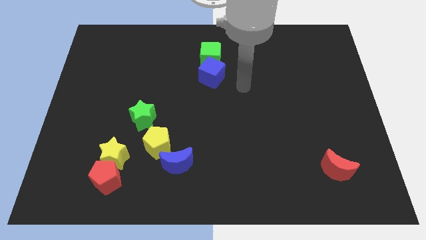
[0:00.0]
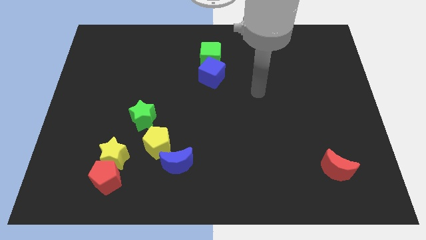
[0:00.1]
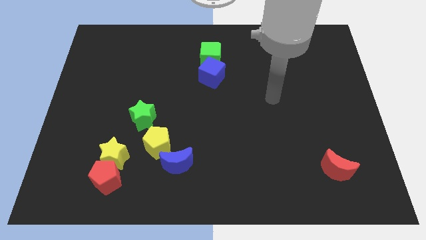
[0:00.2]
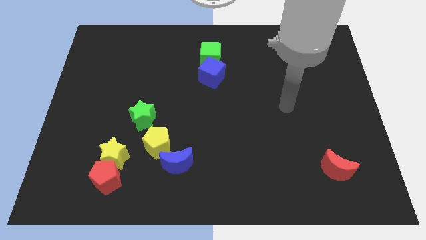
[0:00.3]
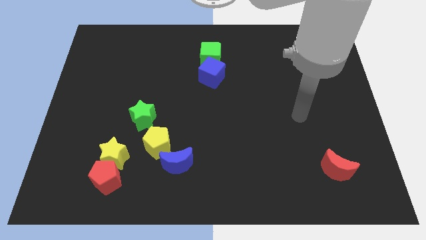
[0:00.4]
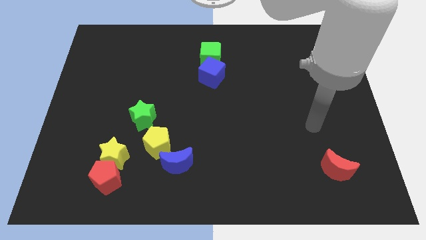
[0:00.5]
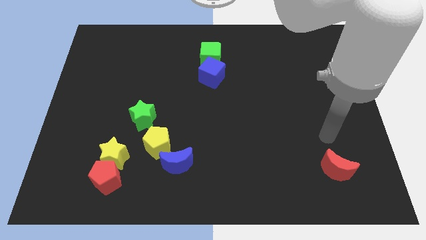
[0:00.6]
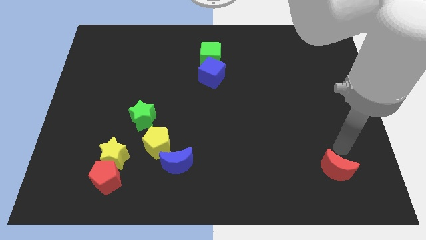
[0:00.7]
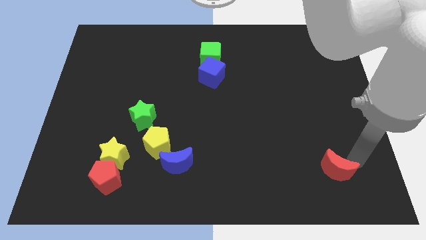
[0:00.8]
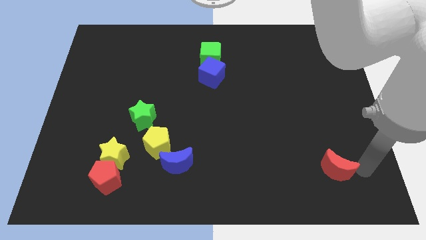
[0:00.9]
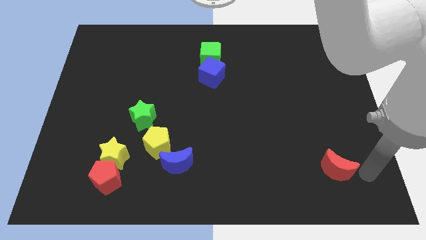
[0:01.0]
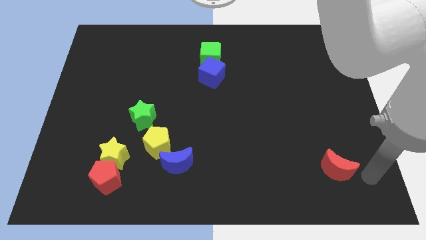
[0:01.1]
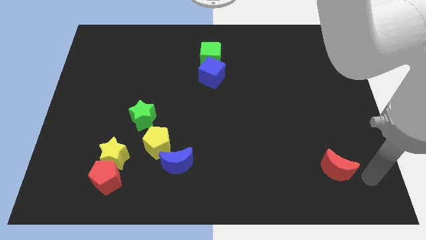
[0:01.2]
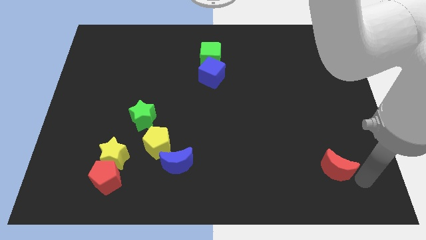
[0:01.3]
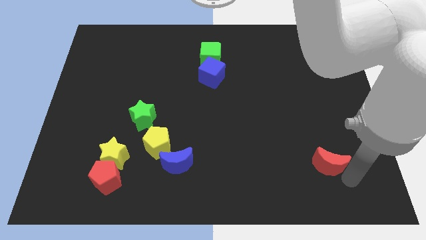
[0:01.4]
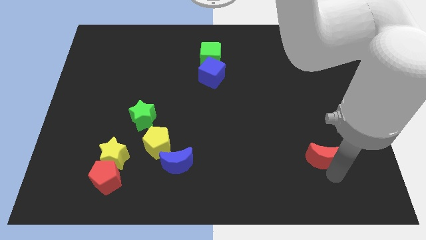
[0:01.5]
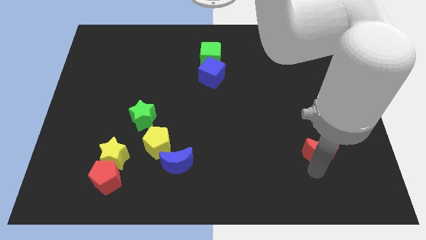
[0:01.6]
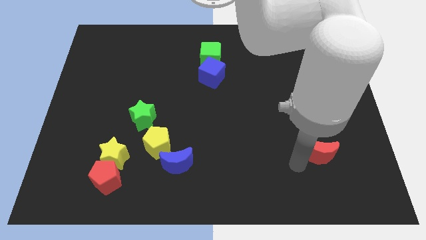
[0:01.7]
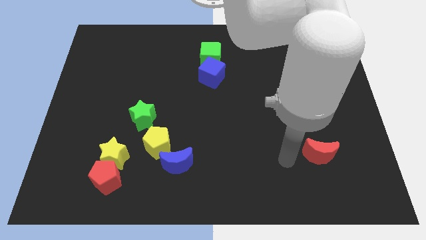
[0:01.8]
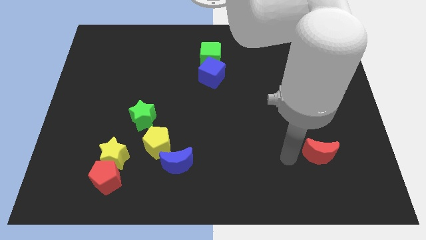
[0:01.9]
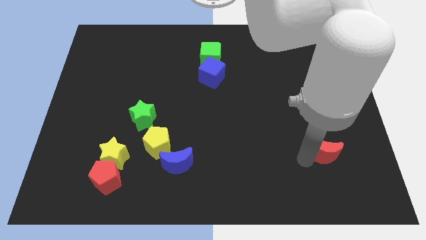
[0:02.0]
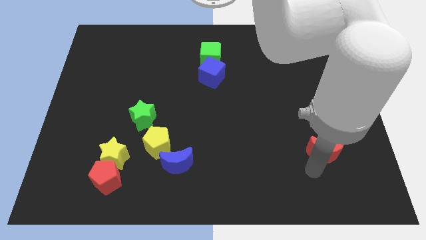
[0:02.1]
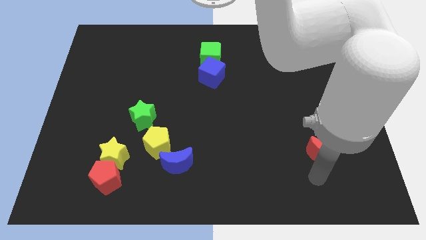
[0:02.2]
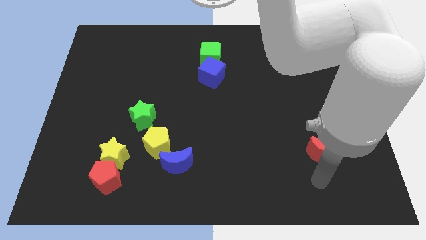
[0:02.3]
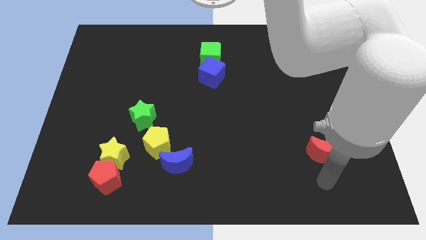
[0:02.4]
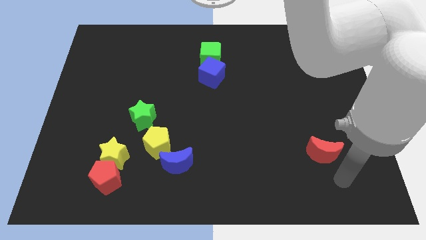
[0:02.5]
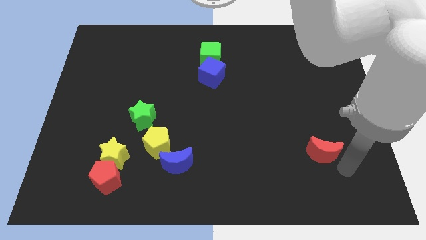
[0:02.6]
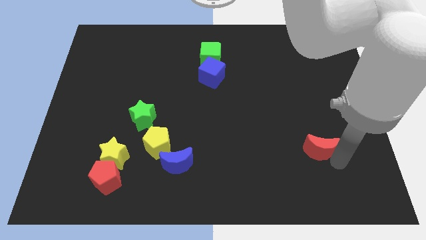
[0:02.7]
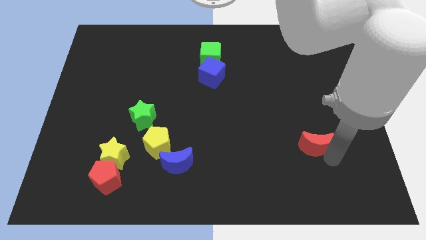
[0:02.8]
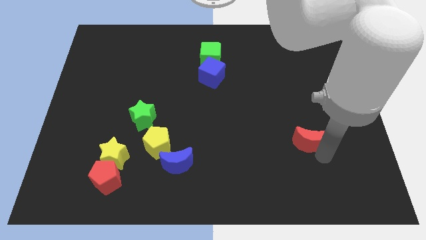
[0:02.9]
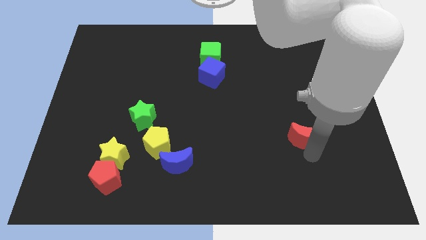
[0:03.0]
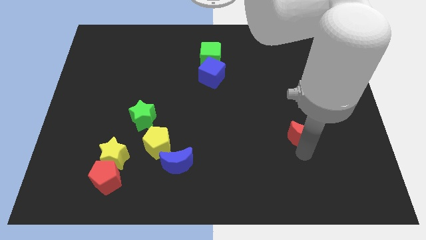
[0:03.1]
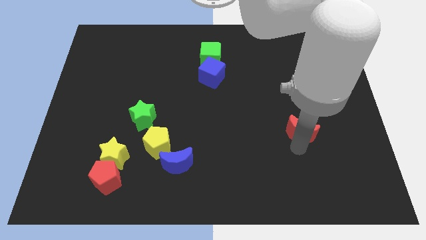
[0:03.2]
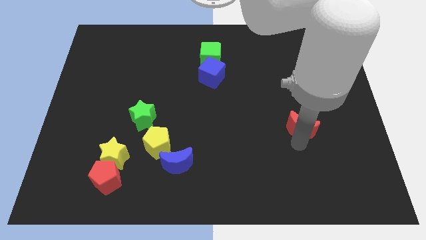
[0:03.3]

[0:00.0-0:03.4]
push the red crescent to the left side of the board

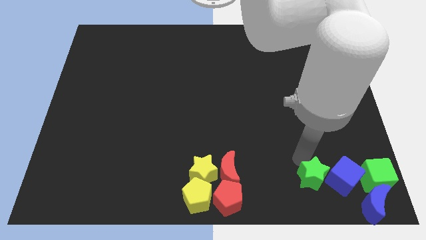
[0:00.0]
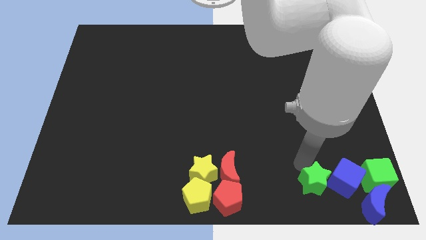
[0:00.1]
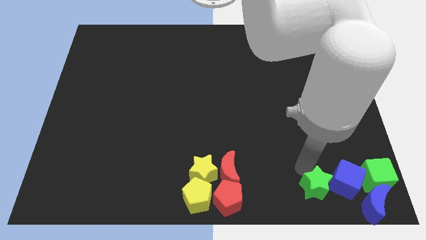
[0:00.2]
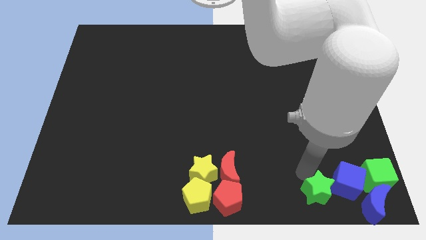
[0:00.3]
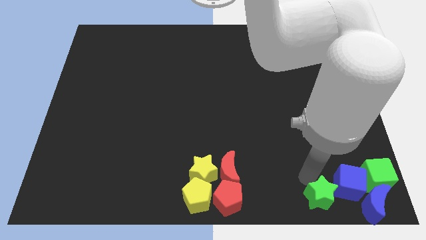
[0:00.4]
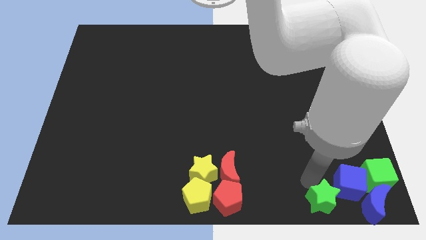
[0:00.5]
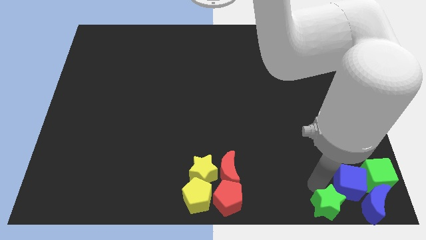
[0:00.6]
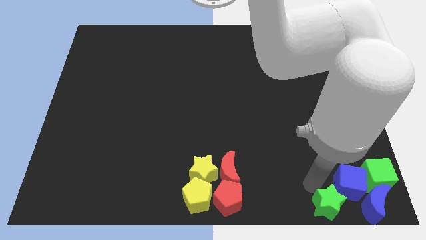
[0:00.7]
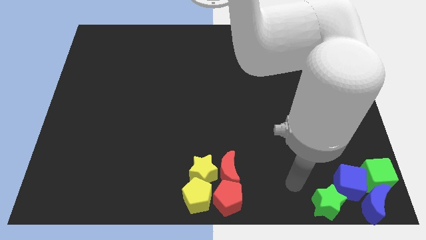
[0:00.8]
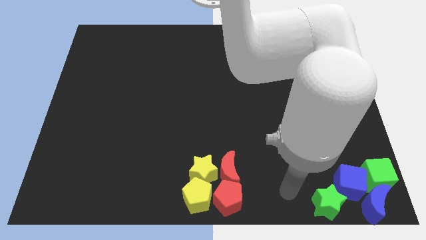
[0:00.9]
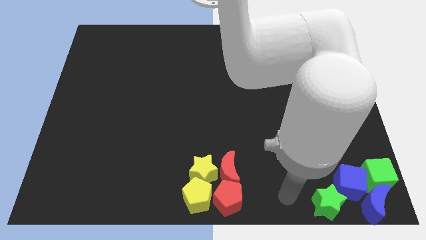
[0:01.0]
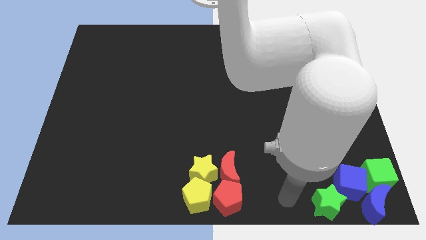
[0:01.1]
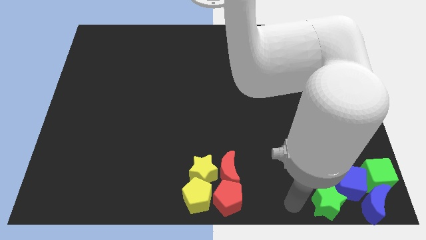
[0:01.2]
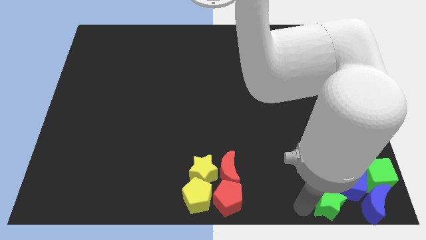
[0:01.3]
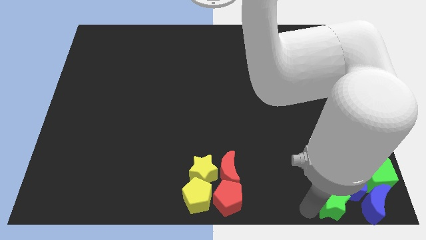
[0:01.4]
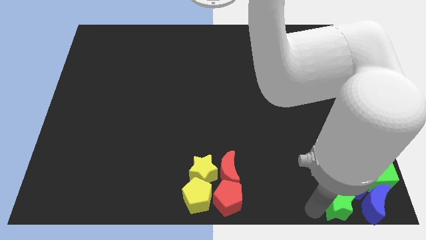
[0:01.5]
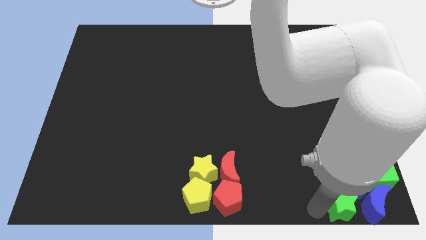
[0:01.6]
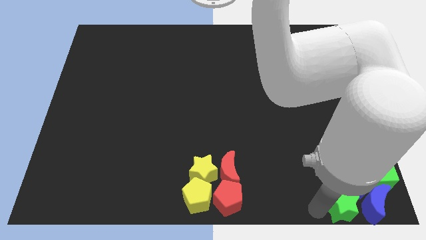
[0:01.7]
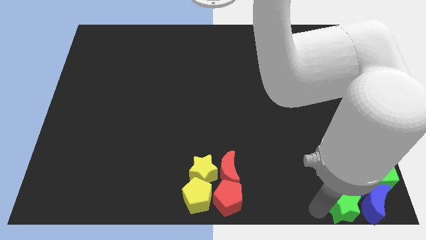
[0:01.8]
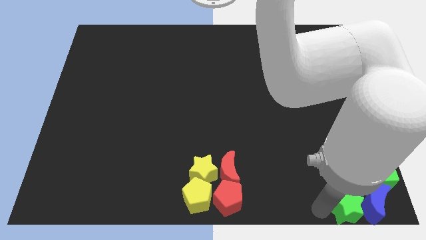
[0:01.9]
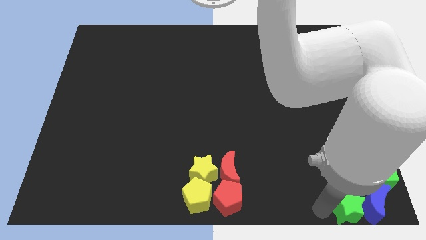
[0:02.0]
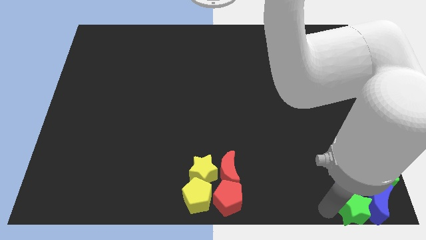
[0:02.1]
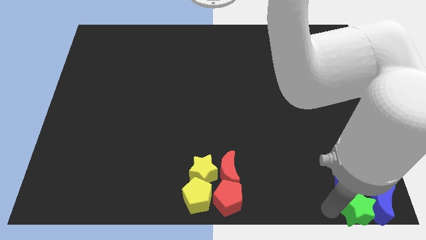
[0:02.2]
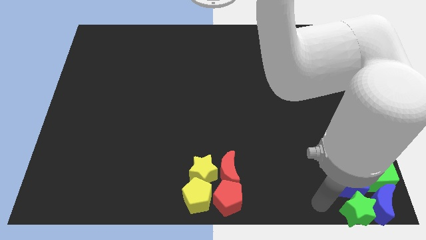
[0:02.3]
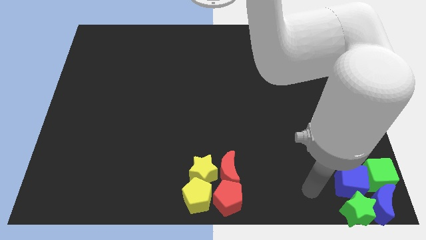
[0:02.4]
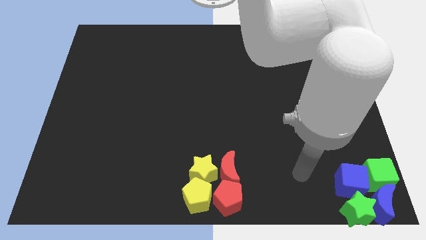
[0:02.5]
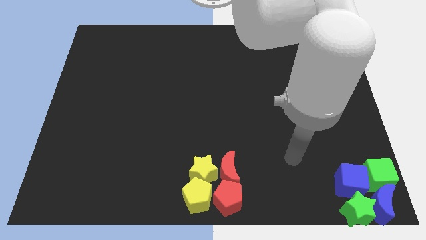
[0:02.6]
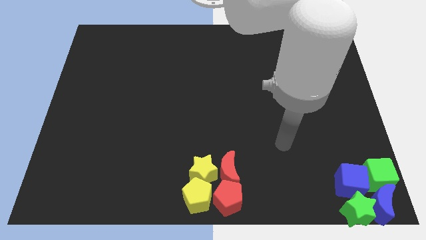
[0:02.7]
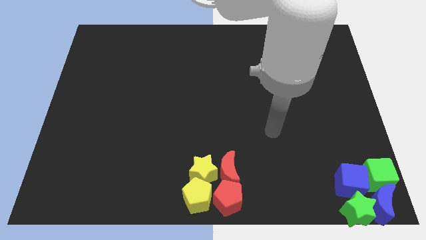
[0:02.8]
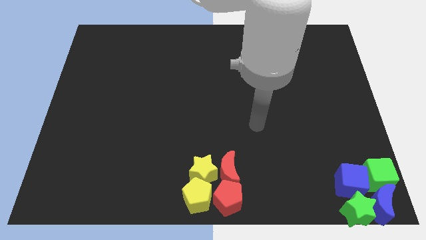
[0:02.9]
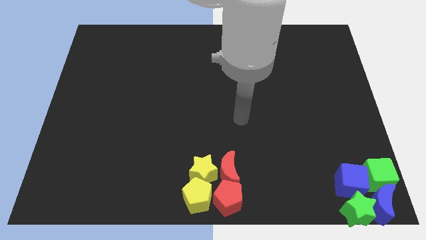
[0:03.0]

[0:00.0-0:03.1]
push green star at the bottom of the blue cube

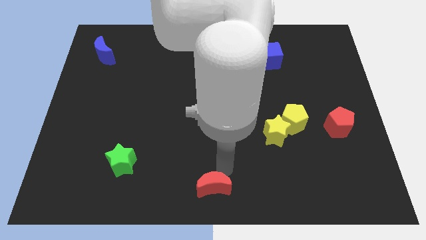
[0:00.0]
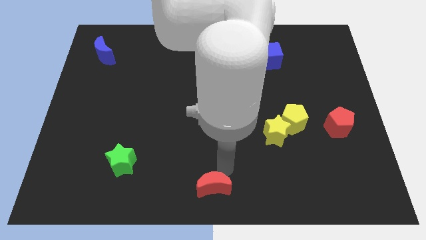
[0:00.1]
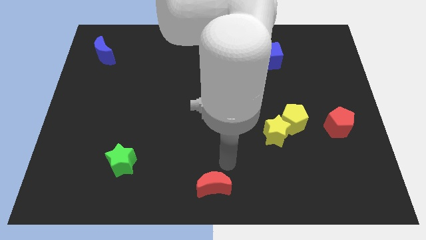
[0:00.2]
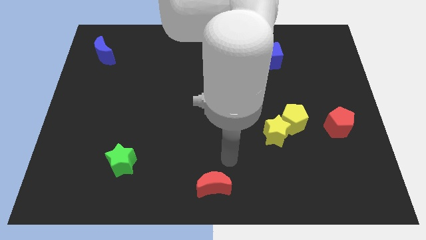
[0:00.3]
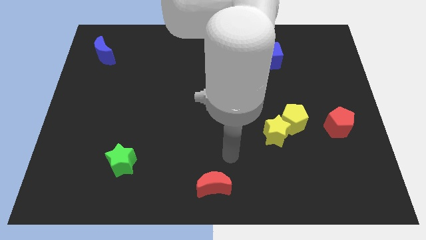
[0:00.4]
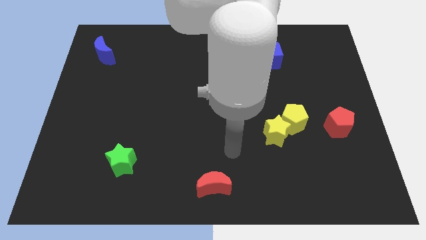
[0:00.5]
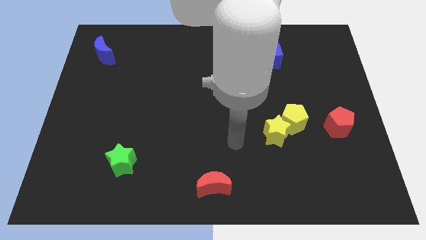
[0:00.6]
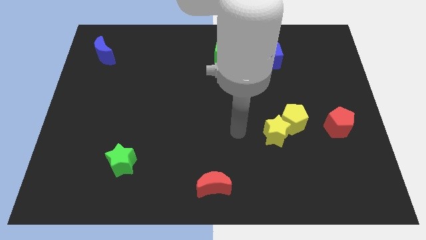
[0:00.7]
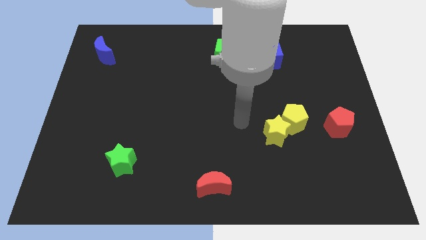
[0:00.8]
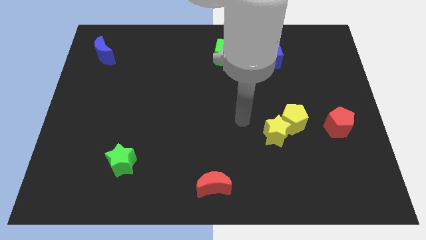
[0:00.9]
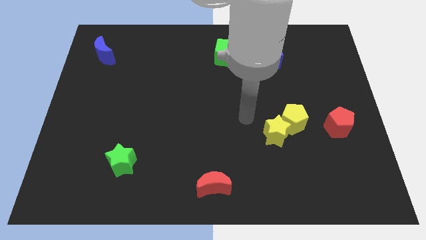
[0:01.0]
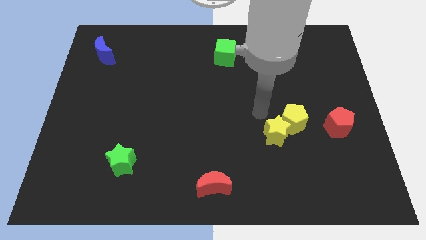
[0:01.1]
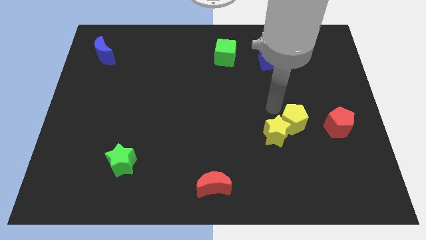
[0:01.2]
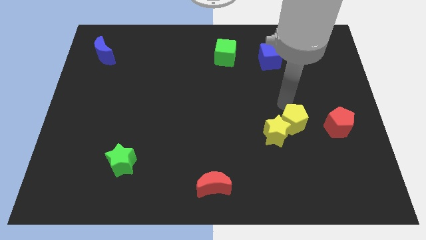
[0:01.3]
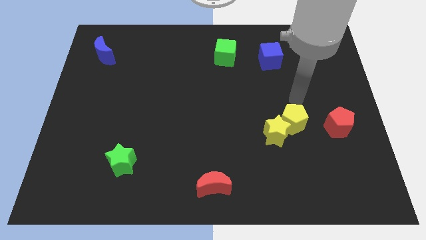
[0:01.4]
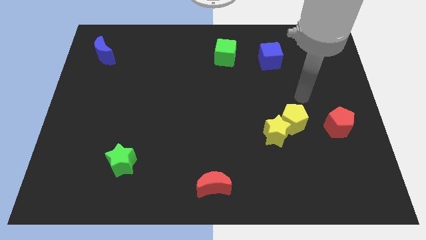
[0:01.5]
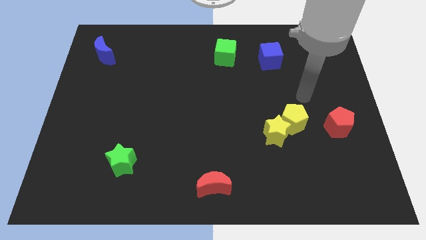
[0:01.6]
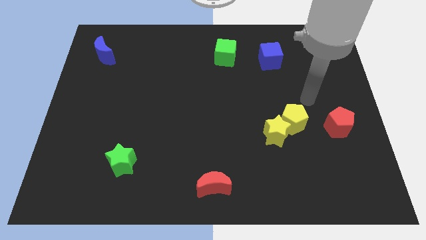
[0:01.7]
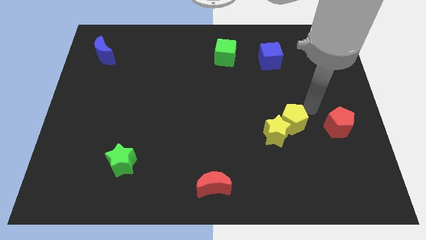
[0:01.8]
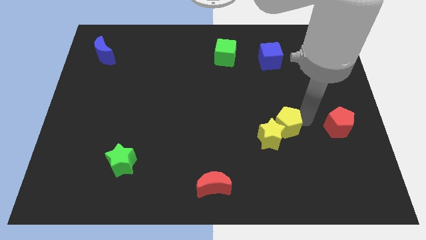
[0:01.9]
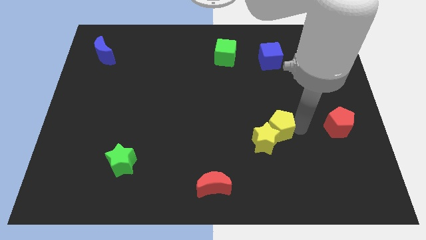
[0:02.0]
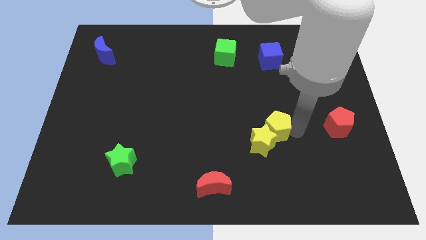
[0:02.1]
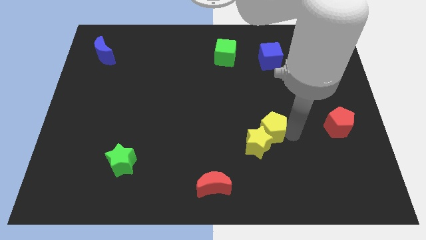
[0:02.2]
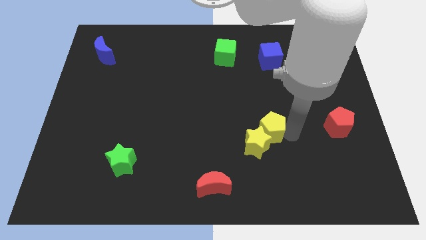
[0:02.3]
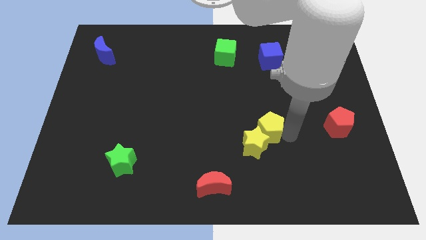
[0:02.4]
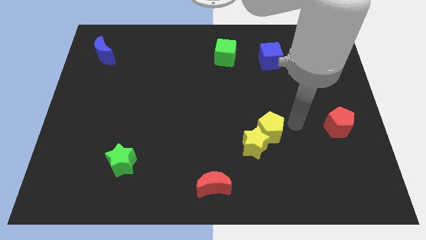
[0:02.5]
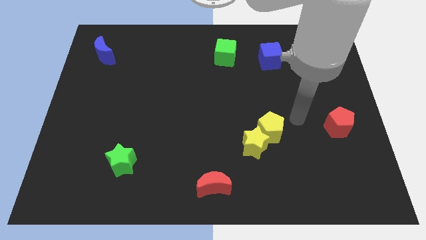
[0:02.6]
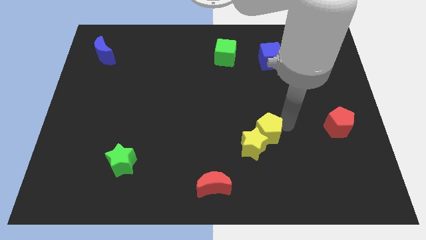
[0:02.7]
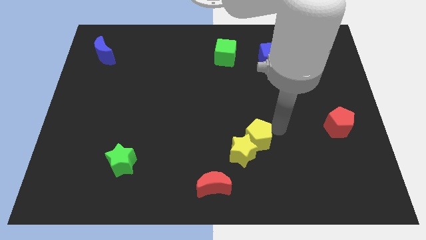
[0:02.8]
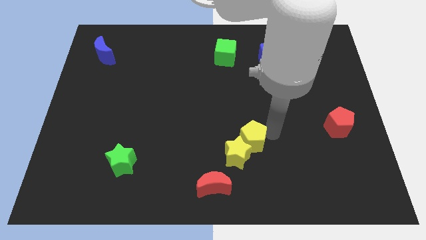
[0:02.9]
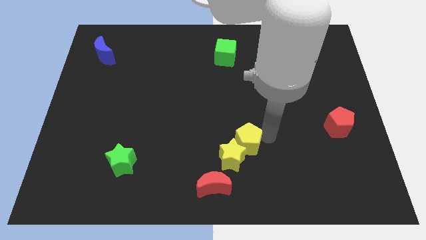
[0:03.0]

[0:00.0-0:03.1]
push the yellow pentagon and yellow star towards the red moon
